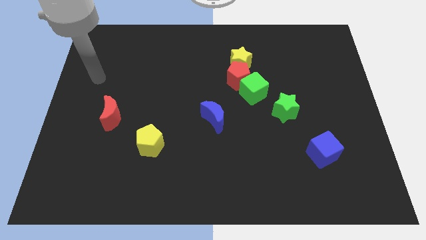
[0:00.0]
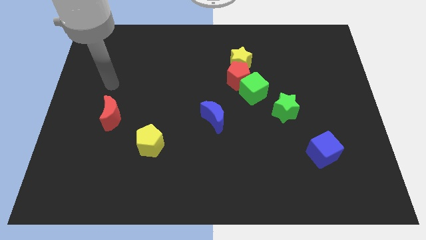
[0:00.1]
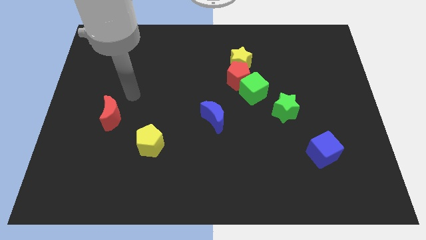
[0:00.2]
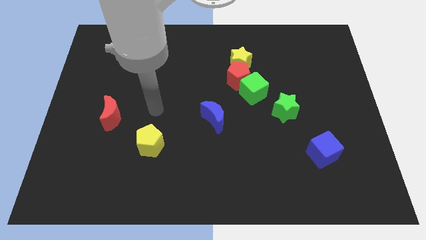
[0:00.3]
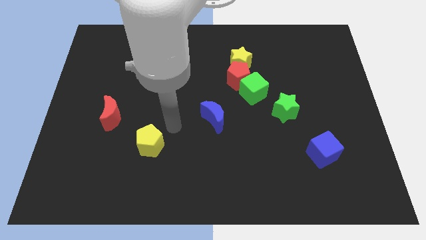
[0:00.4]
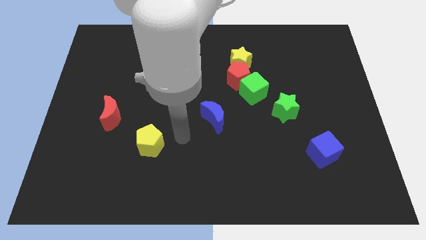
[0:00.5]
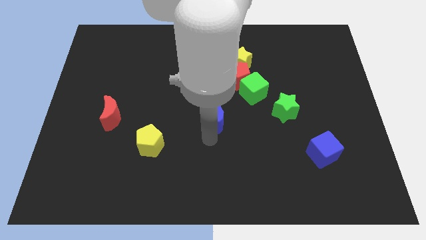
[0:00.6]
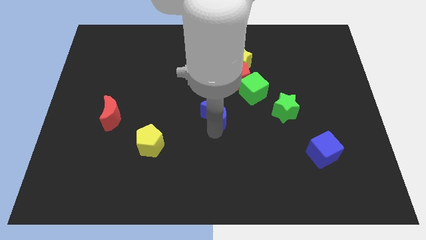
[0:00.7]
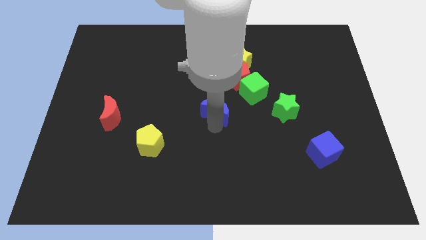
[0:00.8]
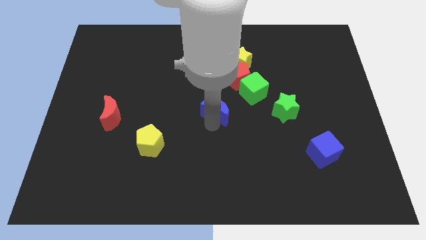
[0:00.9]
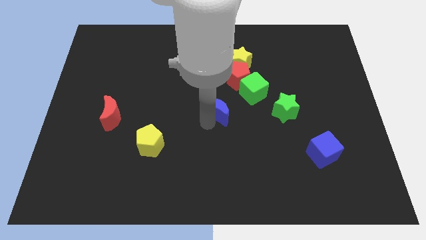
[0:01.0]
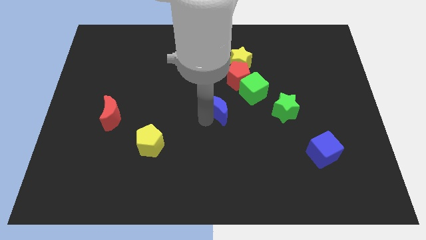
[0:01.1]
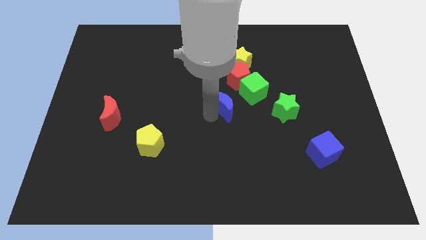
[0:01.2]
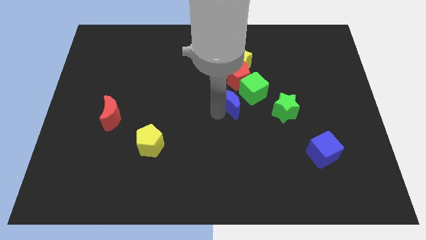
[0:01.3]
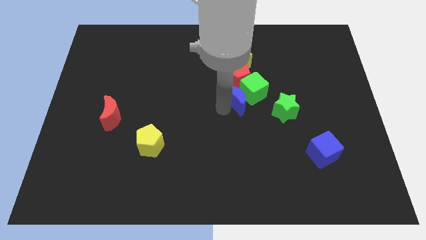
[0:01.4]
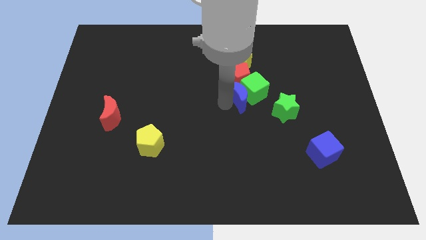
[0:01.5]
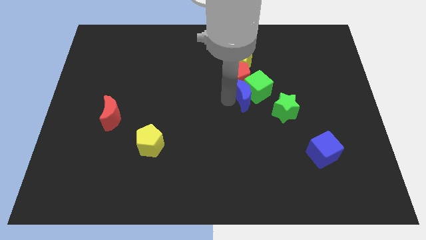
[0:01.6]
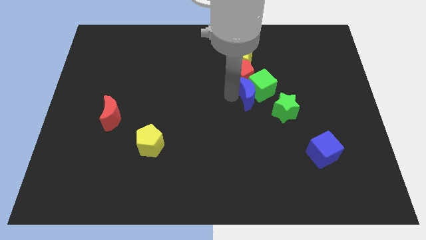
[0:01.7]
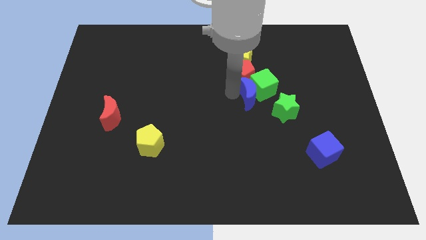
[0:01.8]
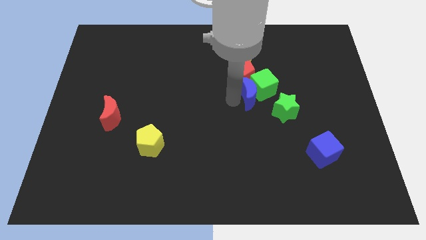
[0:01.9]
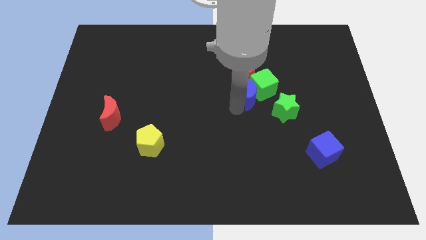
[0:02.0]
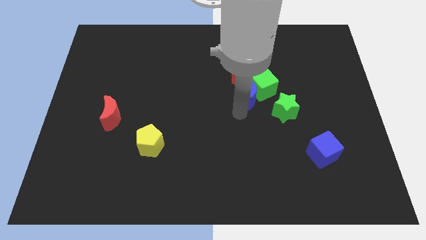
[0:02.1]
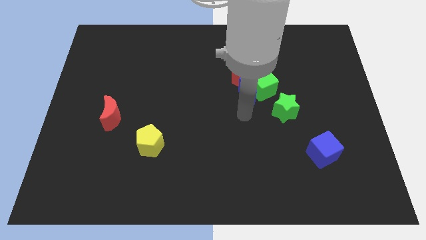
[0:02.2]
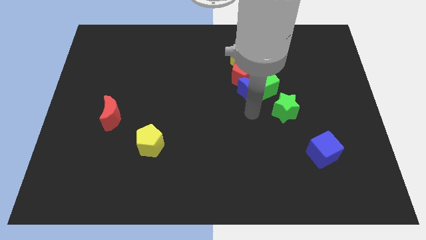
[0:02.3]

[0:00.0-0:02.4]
slide the blue moon to the red pentagon

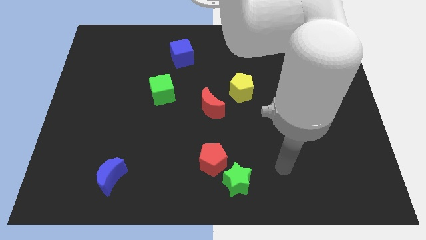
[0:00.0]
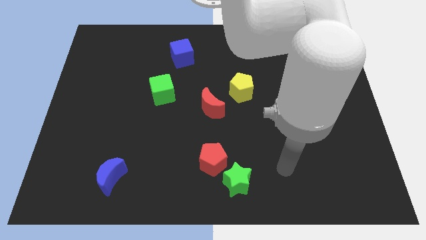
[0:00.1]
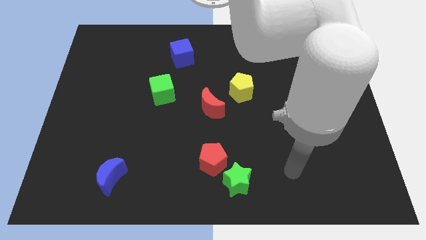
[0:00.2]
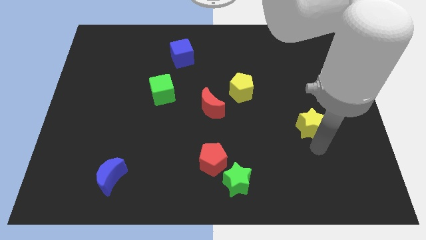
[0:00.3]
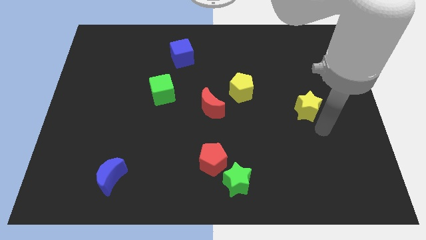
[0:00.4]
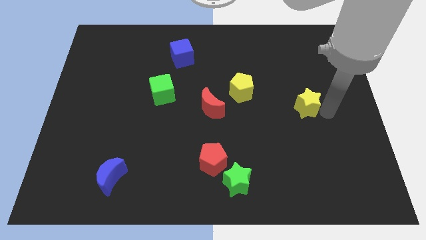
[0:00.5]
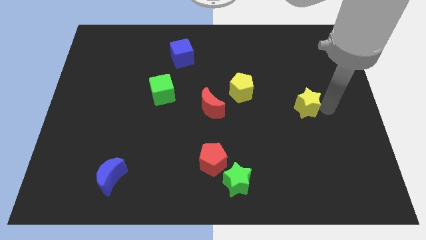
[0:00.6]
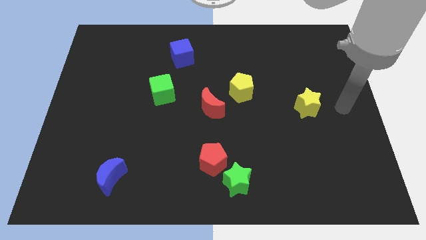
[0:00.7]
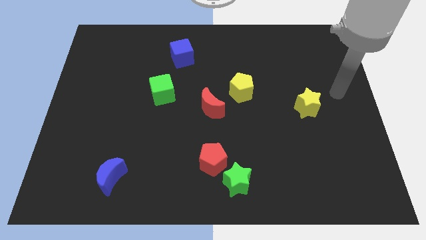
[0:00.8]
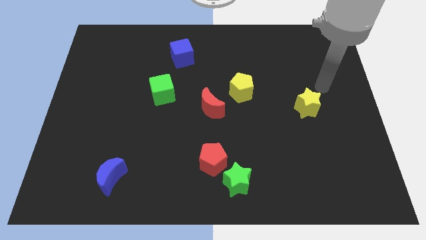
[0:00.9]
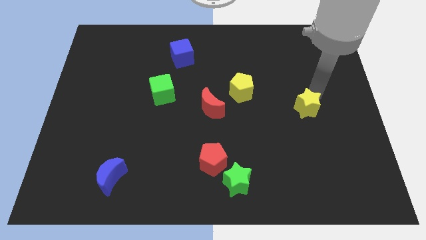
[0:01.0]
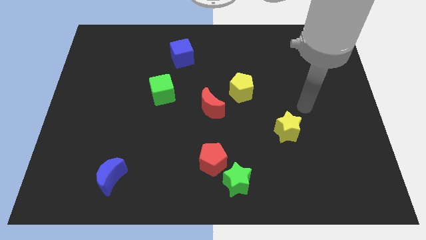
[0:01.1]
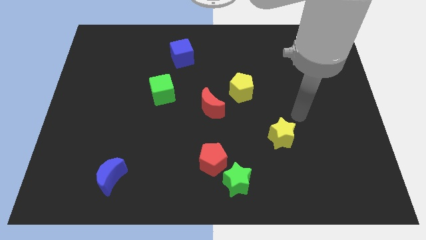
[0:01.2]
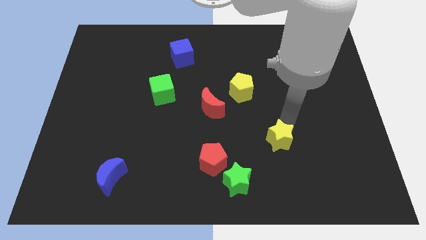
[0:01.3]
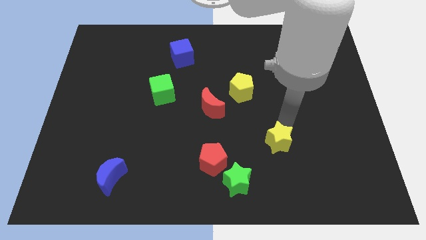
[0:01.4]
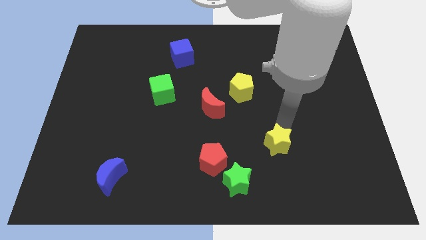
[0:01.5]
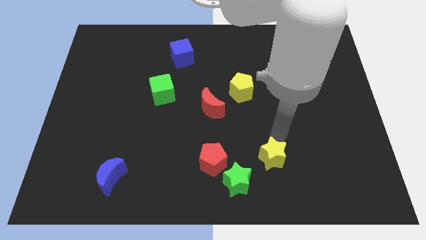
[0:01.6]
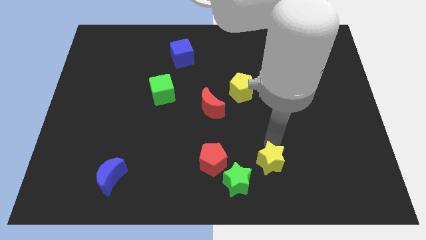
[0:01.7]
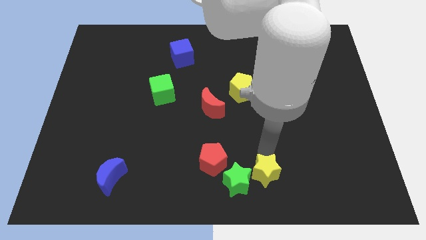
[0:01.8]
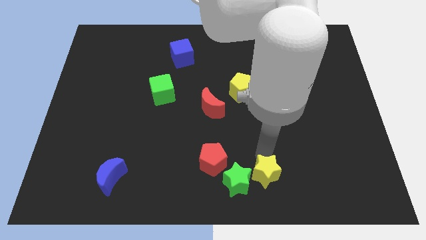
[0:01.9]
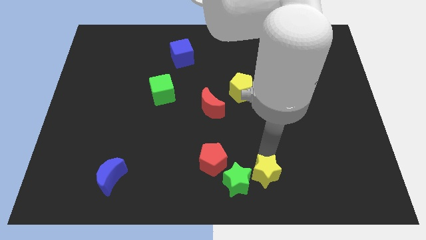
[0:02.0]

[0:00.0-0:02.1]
slide the yellow star close to the green star

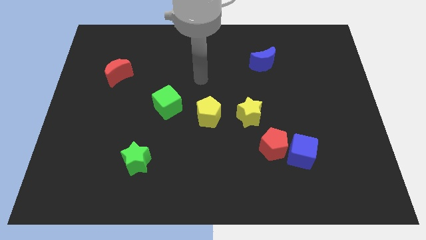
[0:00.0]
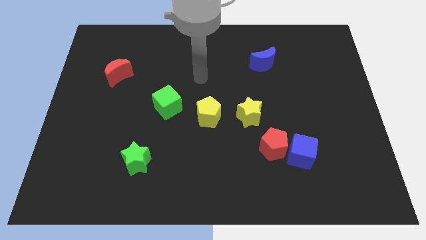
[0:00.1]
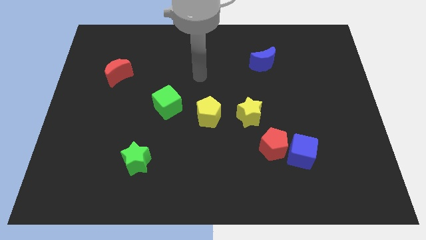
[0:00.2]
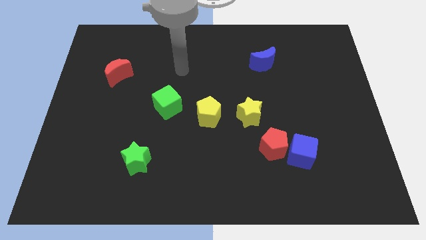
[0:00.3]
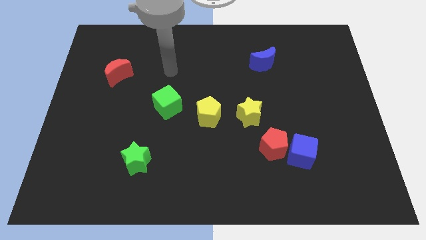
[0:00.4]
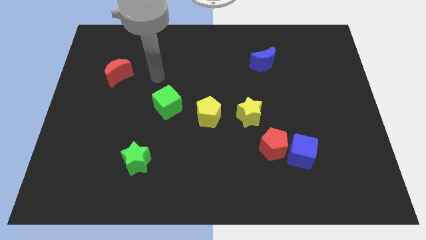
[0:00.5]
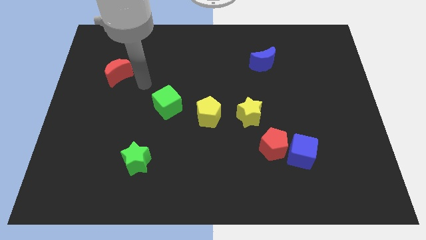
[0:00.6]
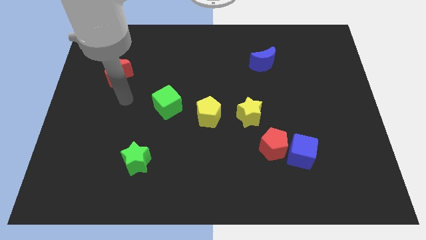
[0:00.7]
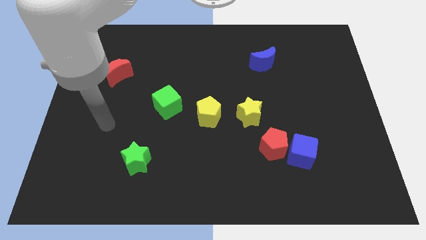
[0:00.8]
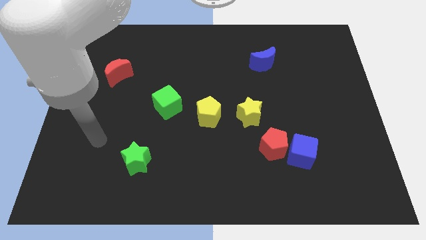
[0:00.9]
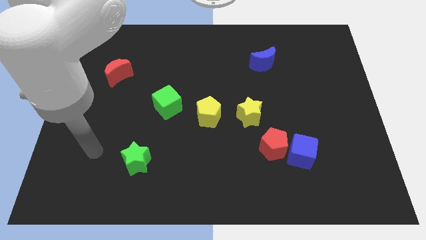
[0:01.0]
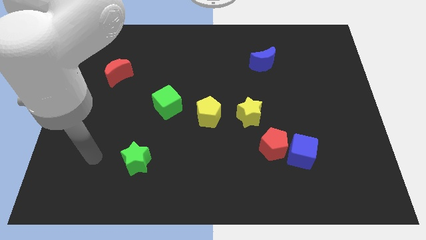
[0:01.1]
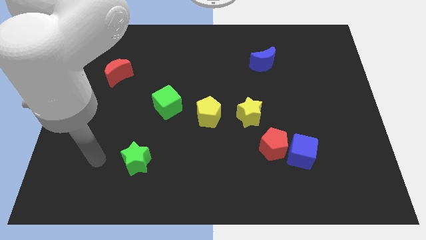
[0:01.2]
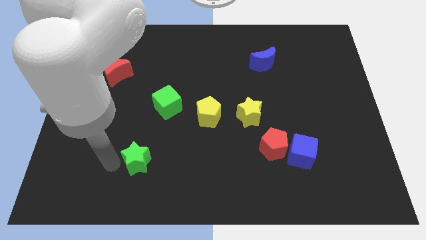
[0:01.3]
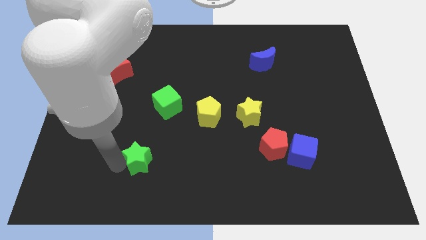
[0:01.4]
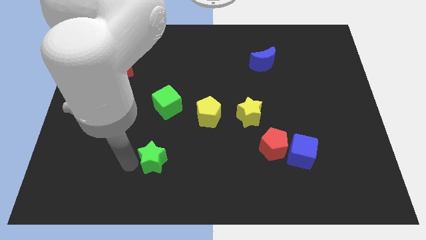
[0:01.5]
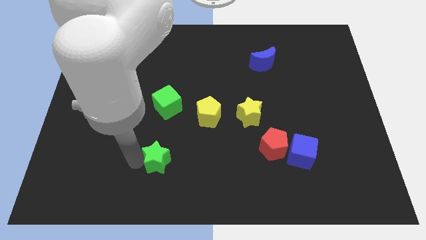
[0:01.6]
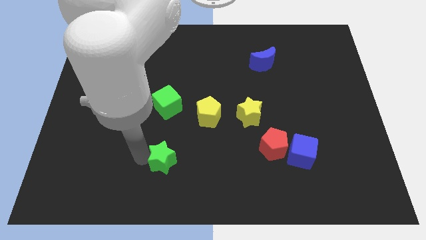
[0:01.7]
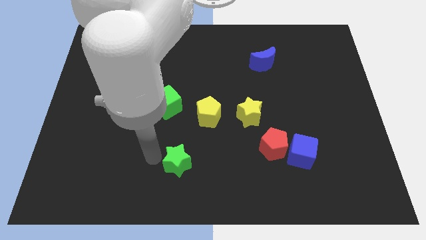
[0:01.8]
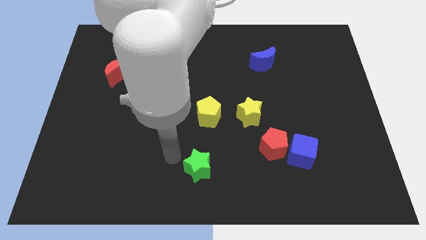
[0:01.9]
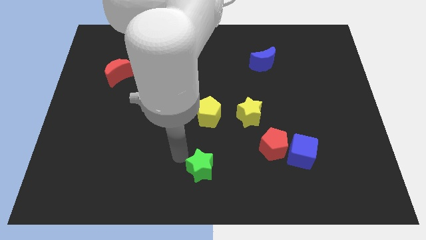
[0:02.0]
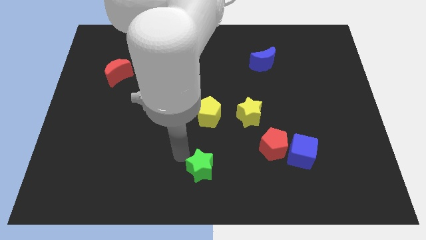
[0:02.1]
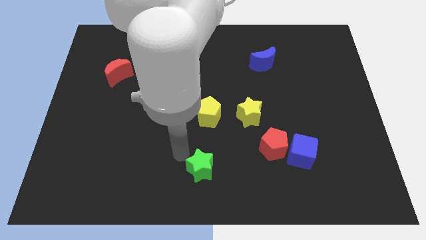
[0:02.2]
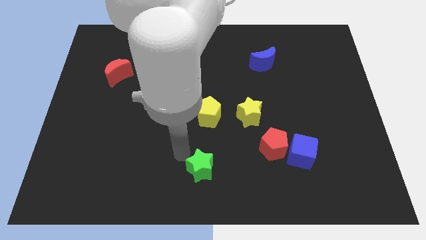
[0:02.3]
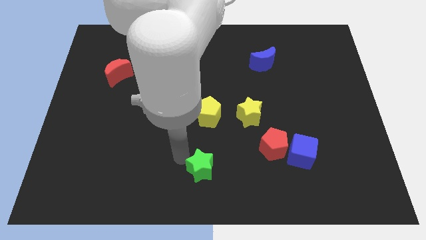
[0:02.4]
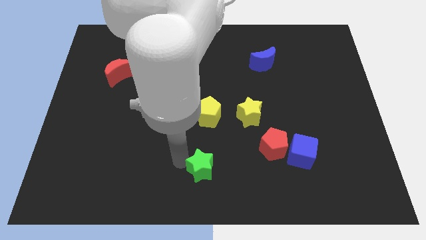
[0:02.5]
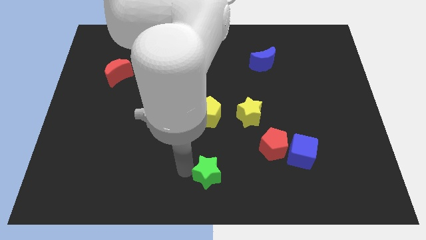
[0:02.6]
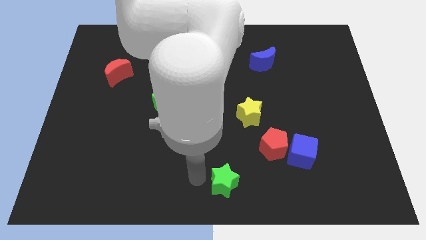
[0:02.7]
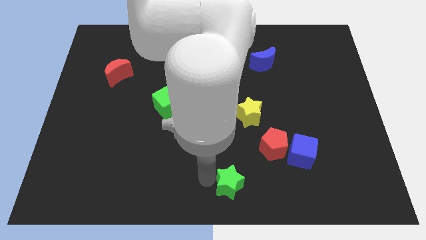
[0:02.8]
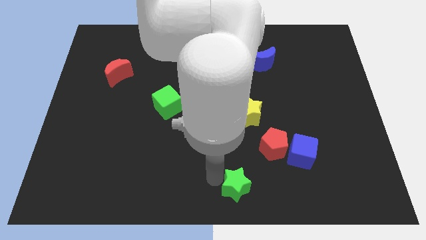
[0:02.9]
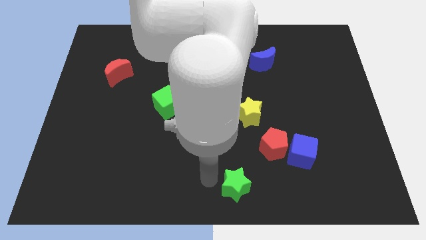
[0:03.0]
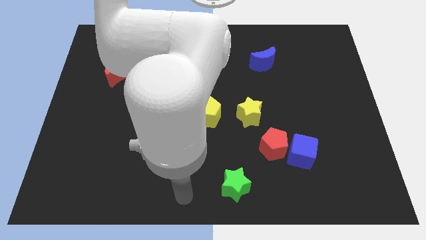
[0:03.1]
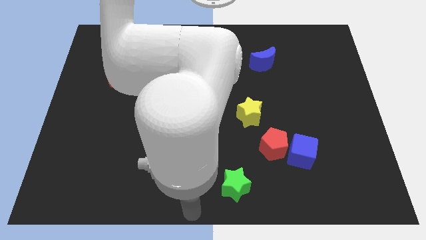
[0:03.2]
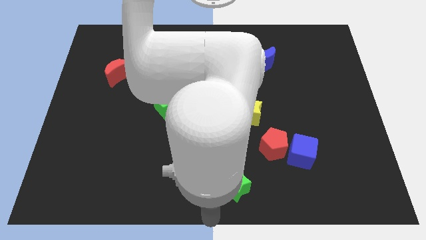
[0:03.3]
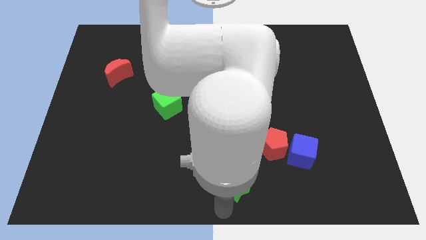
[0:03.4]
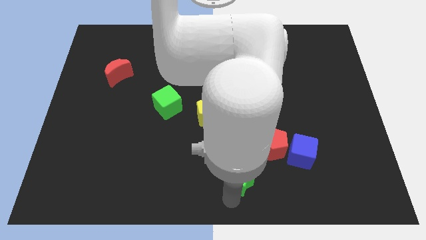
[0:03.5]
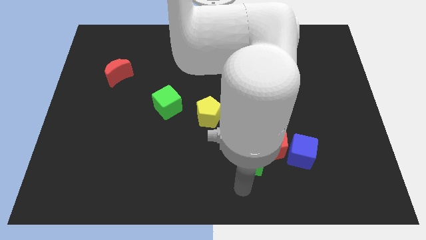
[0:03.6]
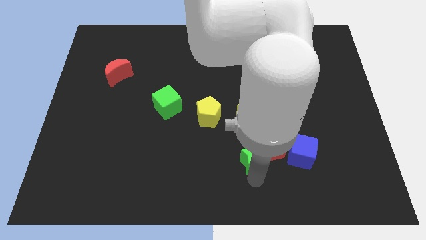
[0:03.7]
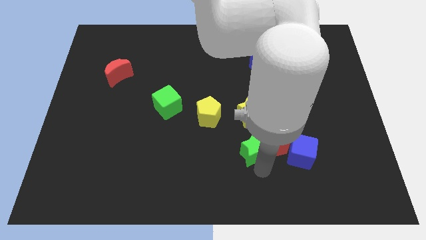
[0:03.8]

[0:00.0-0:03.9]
slide the green star towards the red pentagon

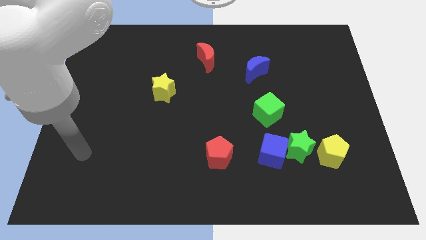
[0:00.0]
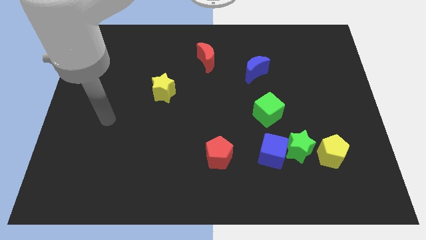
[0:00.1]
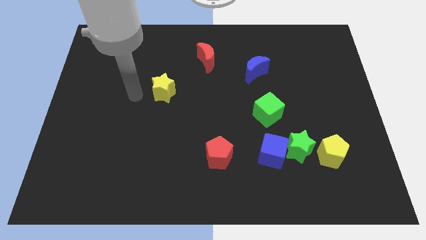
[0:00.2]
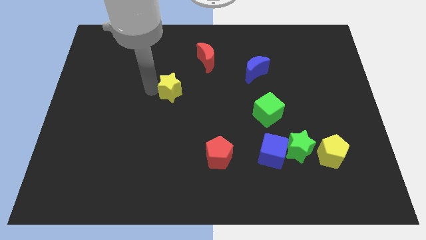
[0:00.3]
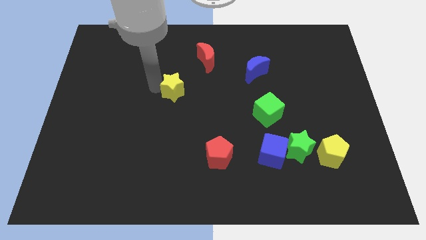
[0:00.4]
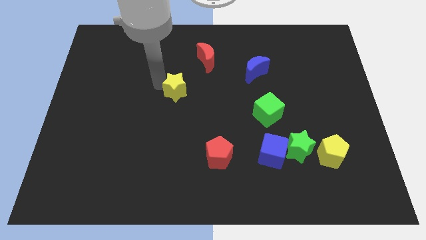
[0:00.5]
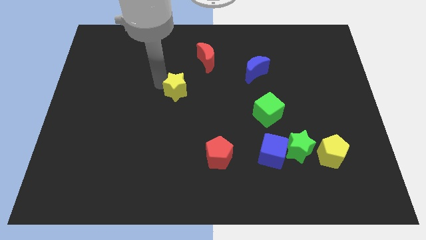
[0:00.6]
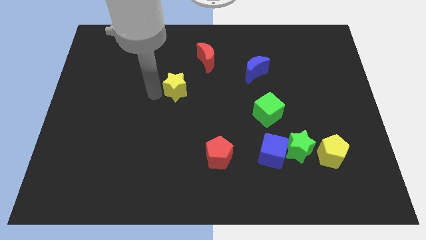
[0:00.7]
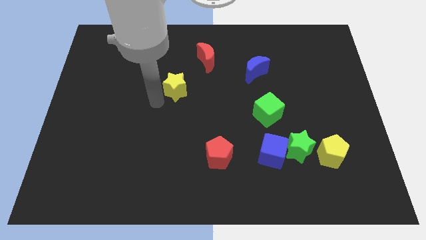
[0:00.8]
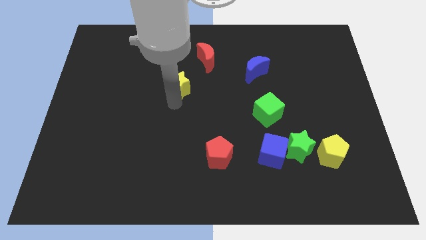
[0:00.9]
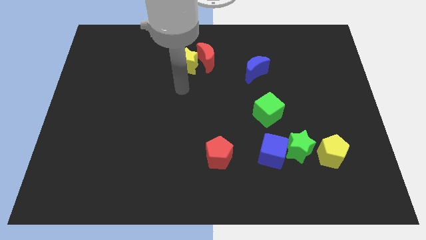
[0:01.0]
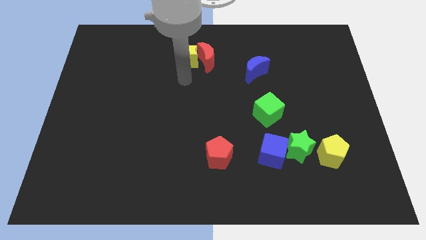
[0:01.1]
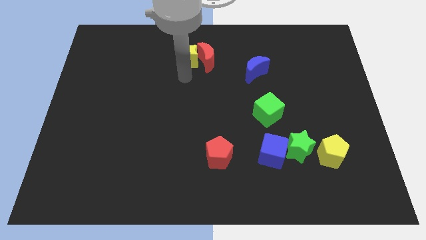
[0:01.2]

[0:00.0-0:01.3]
slide the yellow star close to the red moon
